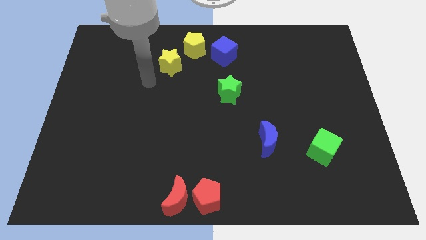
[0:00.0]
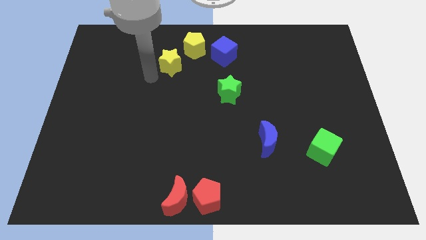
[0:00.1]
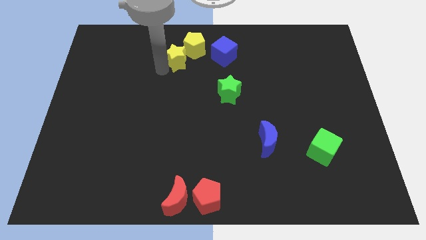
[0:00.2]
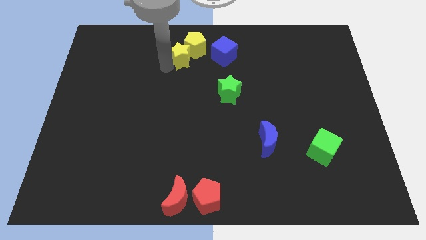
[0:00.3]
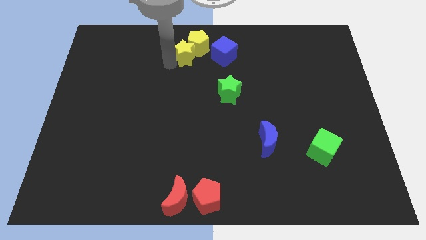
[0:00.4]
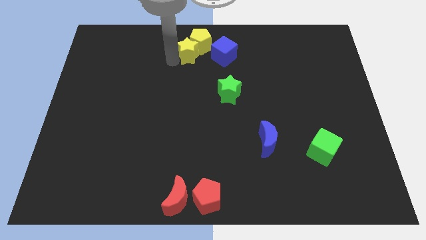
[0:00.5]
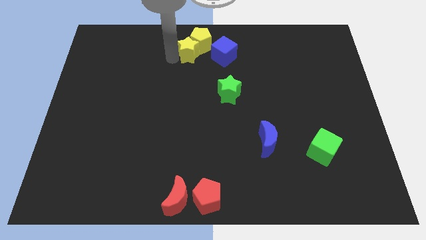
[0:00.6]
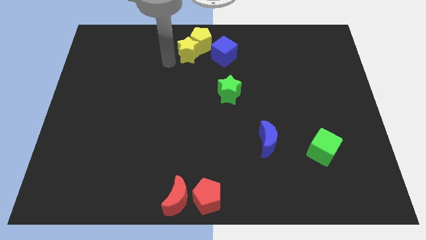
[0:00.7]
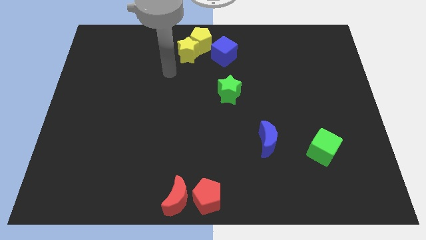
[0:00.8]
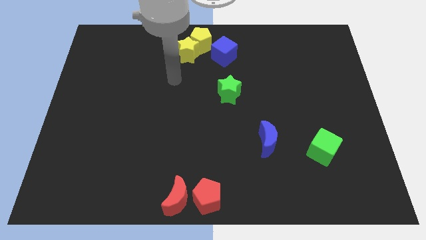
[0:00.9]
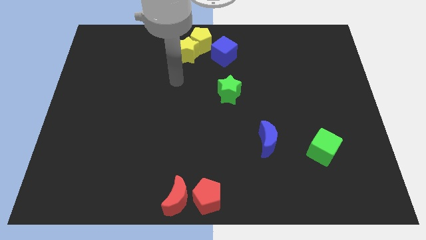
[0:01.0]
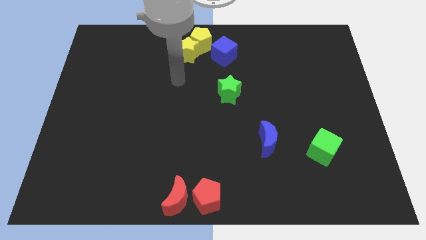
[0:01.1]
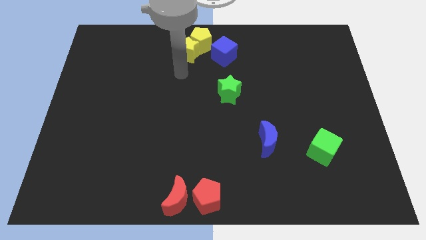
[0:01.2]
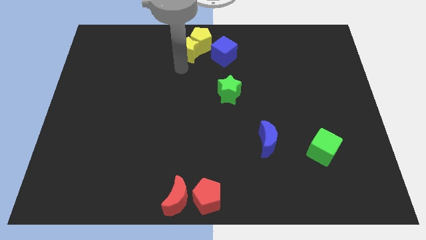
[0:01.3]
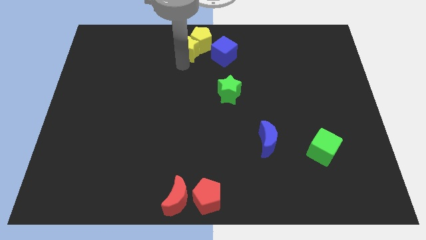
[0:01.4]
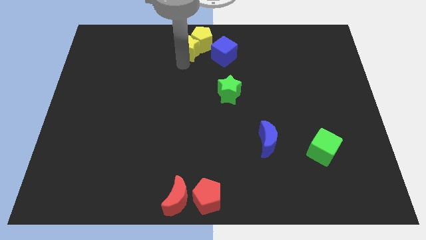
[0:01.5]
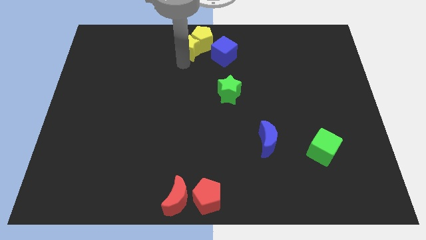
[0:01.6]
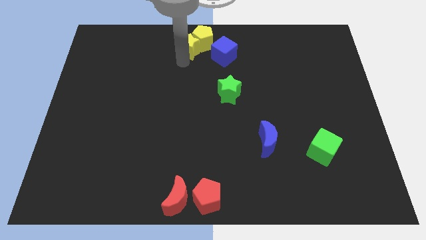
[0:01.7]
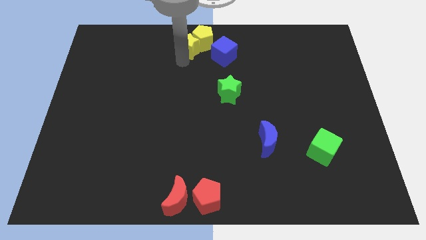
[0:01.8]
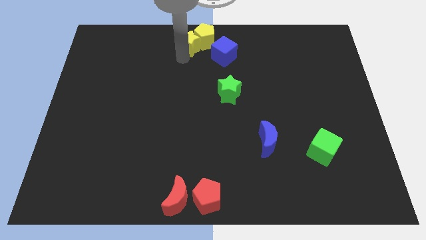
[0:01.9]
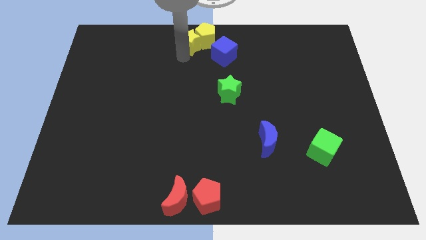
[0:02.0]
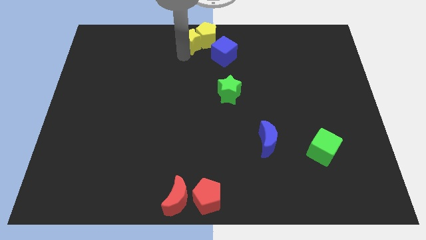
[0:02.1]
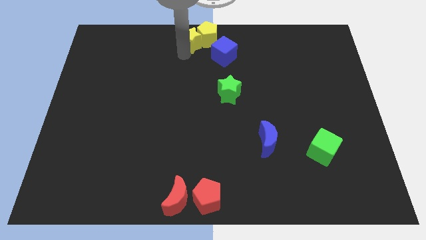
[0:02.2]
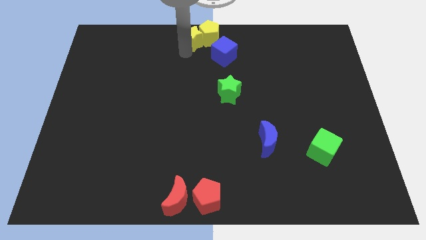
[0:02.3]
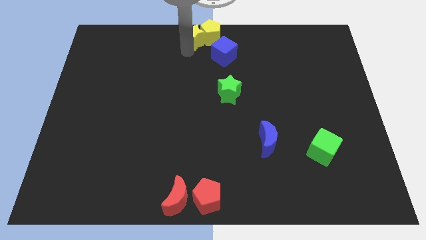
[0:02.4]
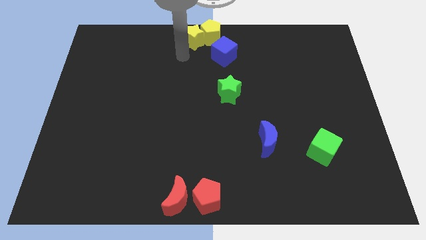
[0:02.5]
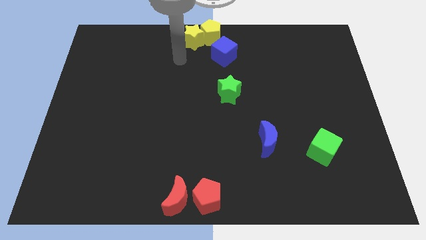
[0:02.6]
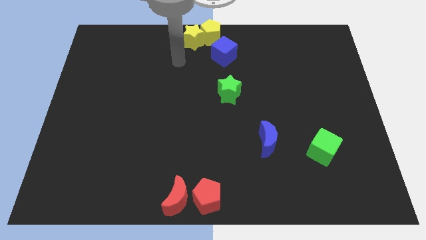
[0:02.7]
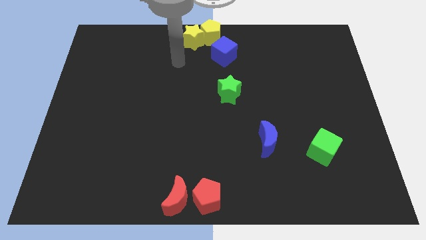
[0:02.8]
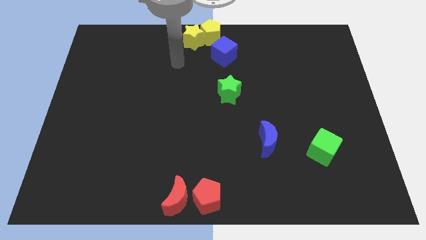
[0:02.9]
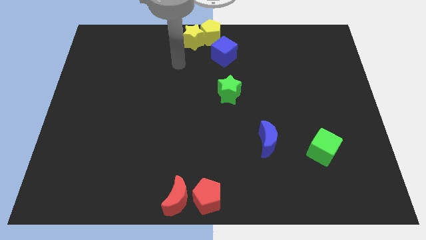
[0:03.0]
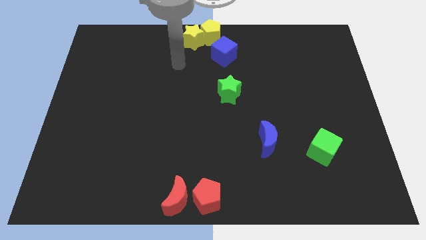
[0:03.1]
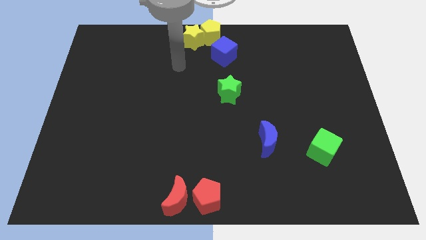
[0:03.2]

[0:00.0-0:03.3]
push the yellow star into the yellow pentagon to the top center of the board

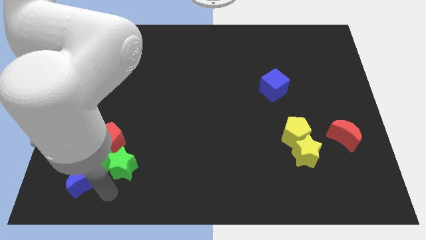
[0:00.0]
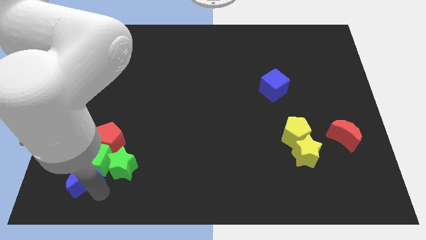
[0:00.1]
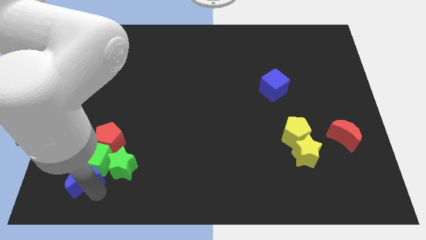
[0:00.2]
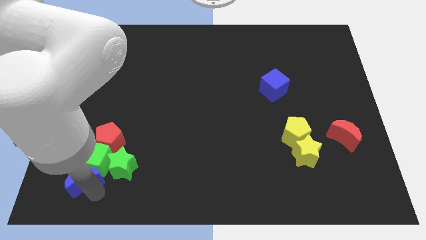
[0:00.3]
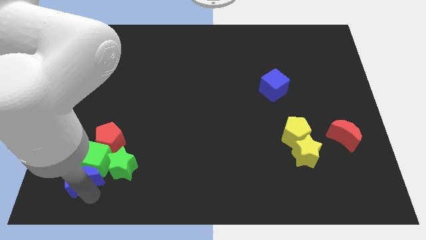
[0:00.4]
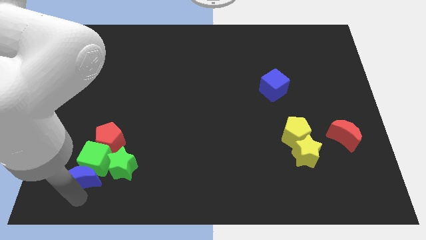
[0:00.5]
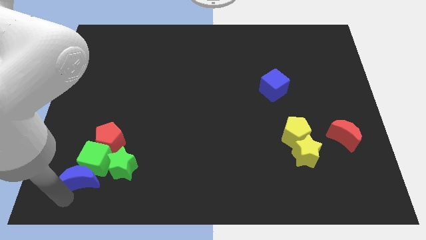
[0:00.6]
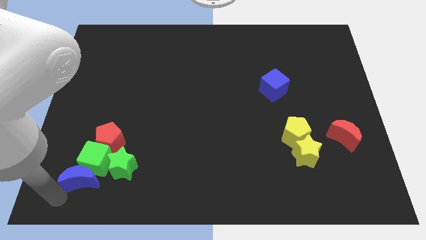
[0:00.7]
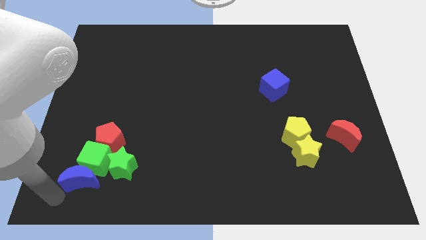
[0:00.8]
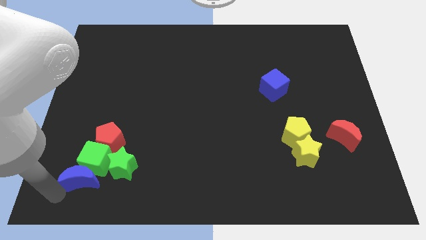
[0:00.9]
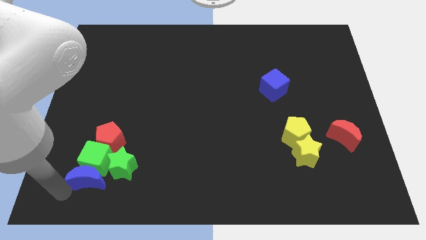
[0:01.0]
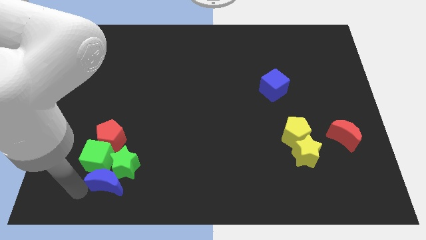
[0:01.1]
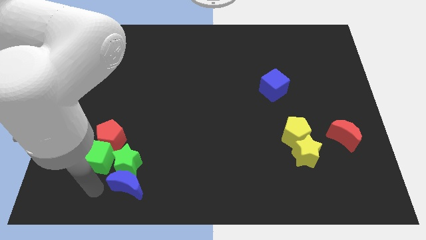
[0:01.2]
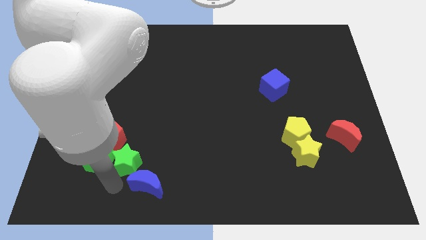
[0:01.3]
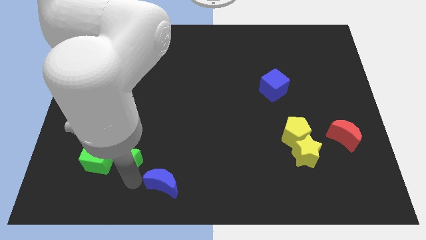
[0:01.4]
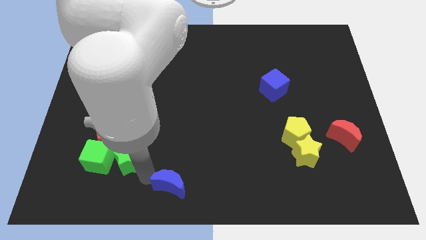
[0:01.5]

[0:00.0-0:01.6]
separate the blue crescent from the green cube

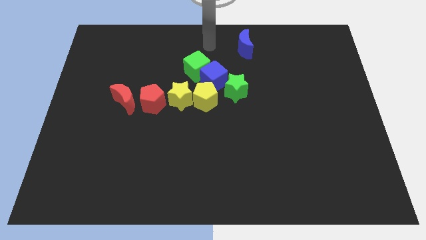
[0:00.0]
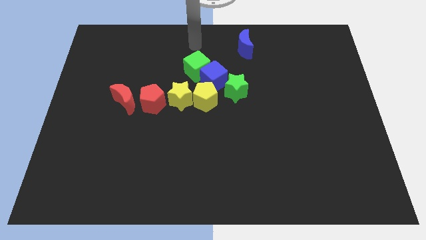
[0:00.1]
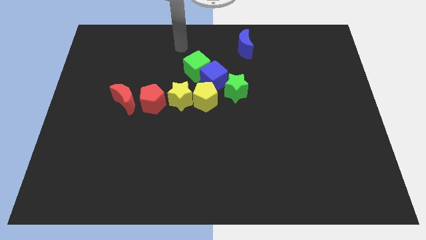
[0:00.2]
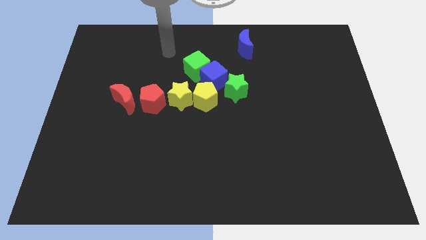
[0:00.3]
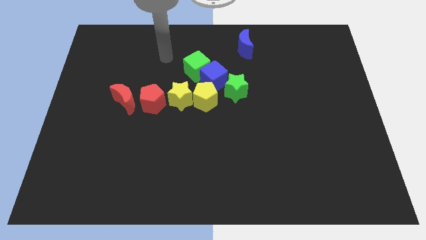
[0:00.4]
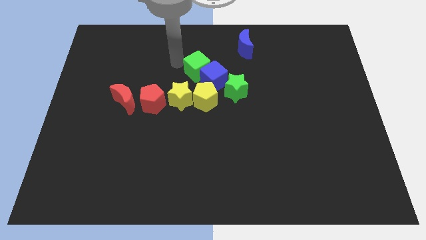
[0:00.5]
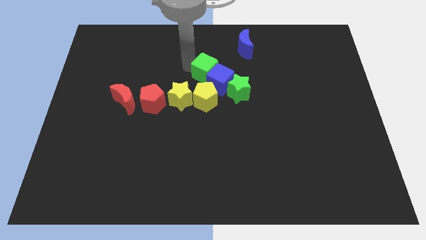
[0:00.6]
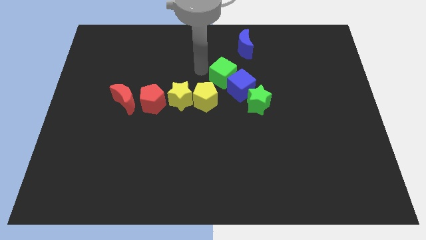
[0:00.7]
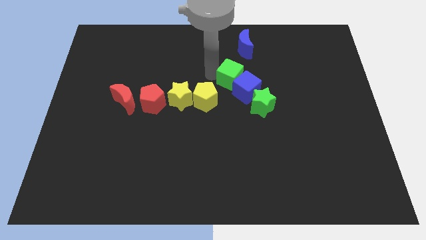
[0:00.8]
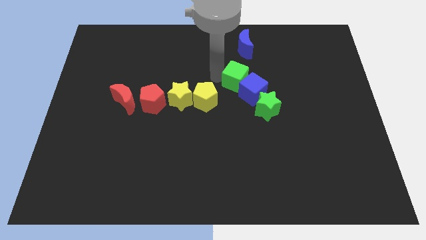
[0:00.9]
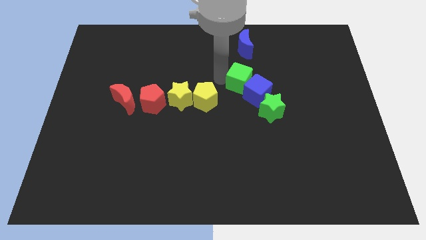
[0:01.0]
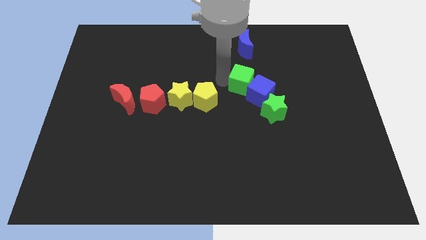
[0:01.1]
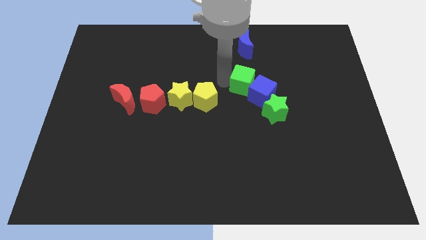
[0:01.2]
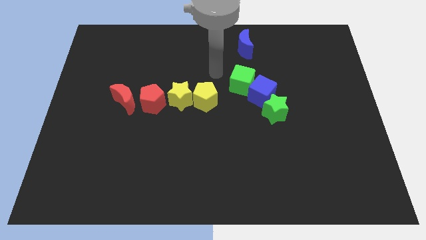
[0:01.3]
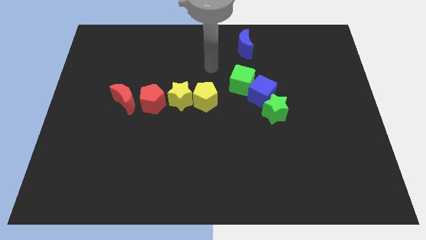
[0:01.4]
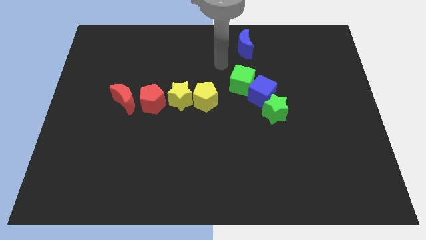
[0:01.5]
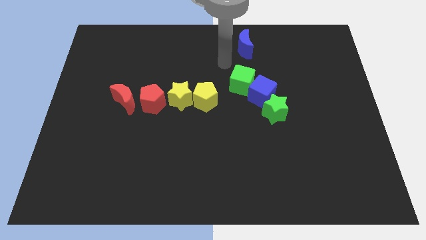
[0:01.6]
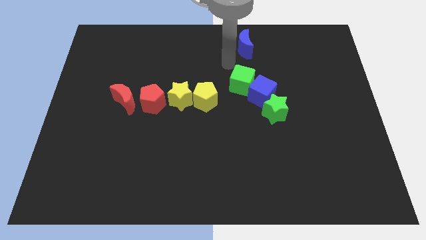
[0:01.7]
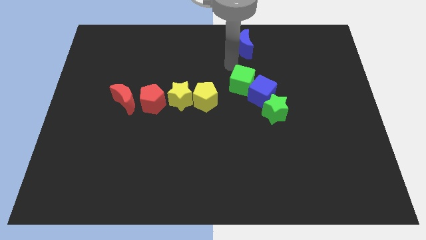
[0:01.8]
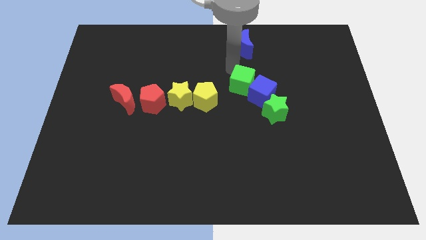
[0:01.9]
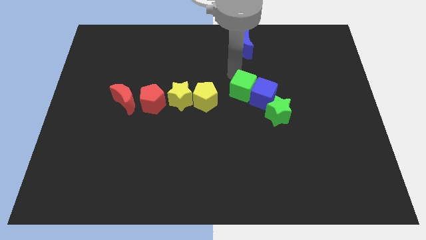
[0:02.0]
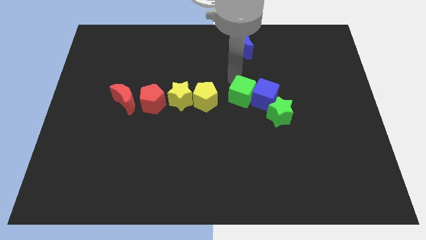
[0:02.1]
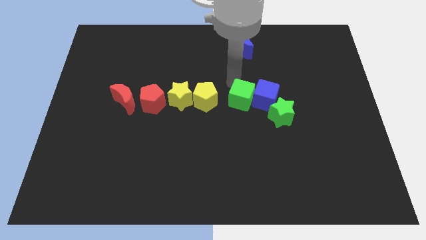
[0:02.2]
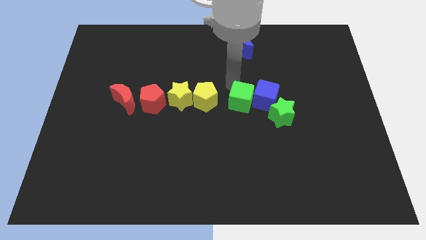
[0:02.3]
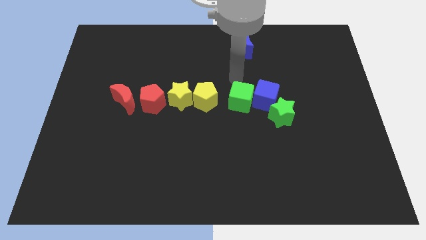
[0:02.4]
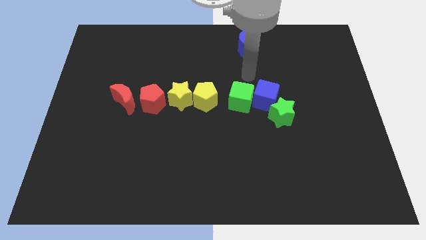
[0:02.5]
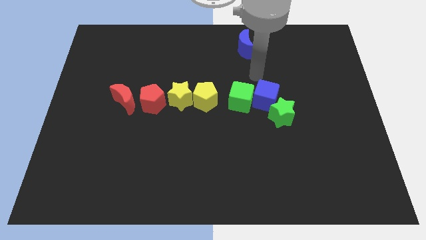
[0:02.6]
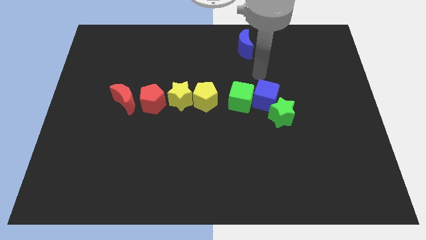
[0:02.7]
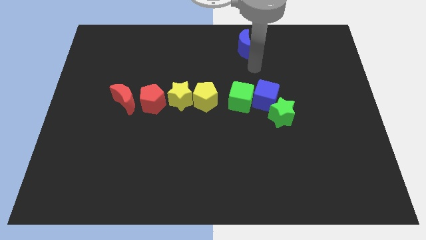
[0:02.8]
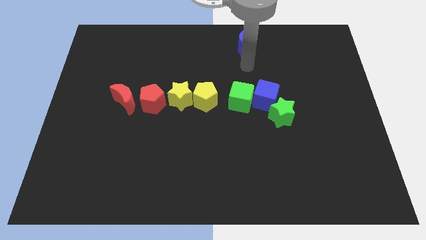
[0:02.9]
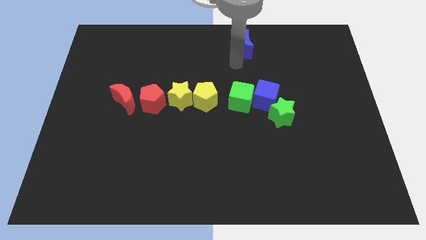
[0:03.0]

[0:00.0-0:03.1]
move green blocks and the blue cube to the bottom of the board

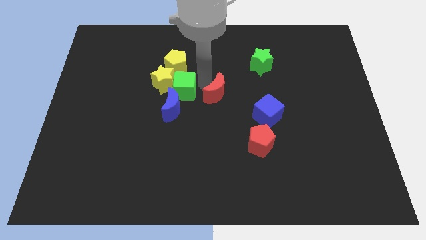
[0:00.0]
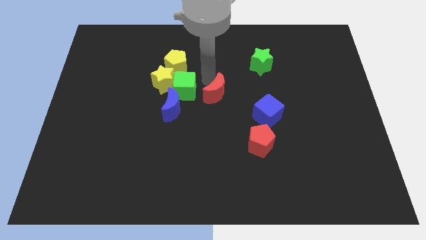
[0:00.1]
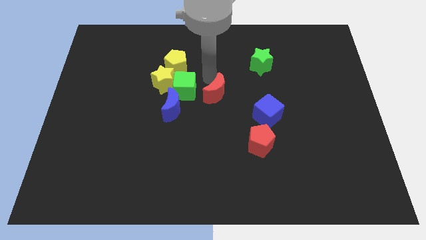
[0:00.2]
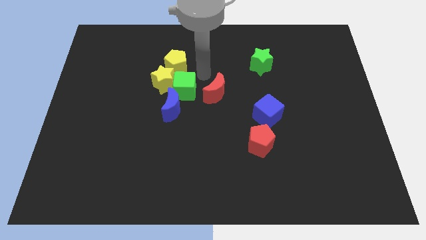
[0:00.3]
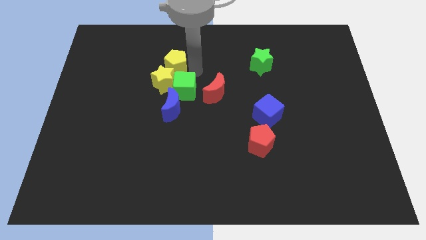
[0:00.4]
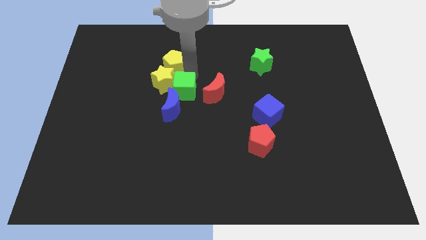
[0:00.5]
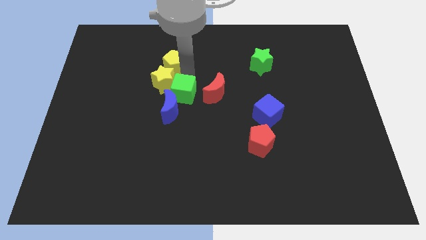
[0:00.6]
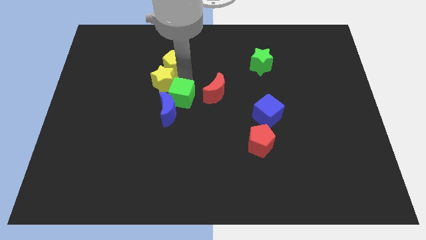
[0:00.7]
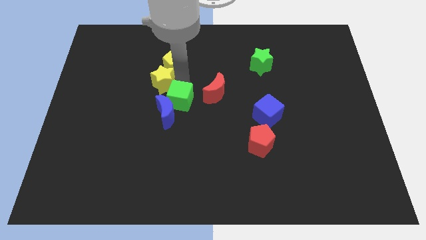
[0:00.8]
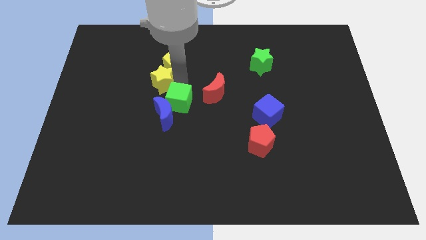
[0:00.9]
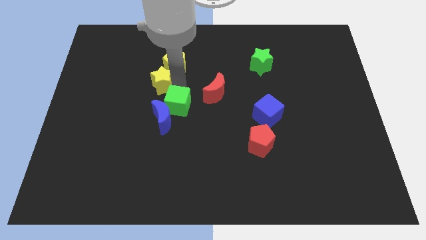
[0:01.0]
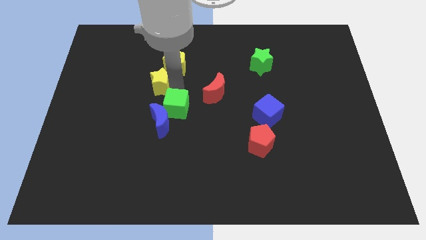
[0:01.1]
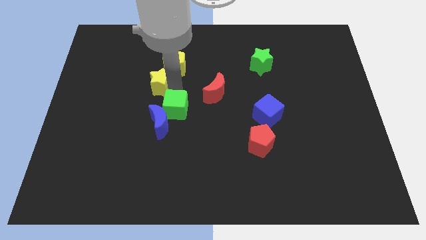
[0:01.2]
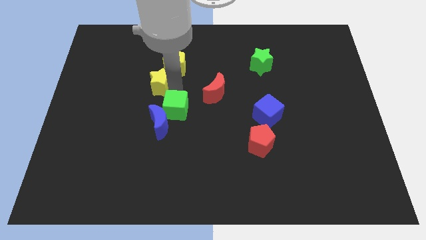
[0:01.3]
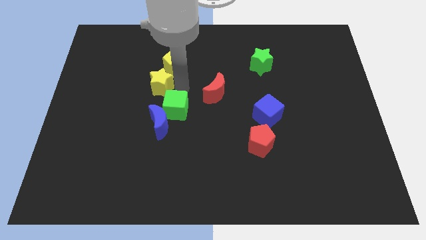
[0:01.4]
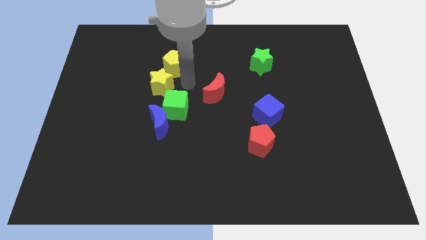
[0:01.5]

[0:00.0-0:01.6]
move the green cube diagonally bottom right to the yellow star
